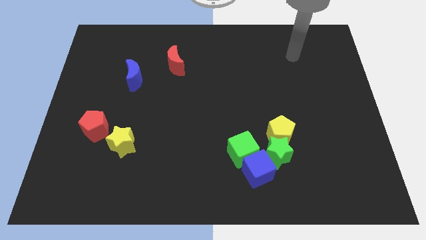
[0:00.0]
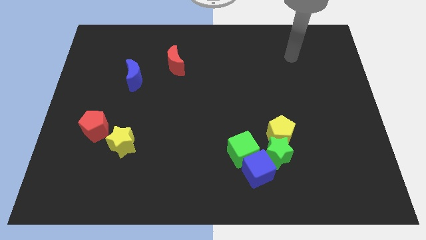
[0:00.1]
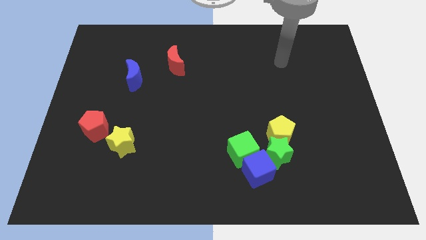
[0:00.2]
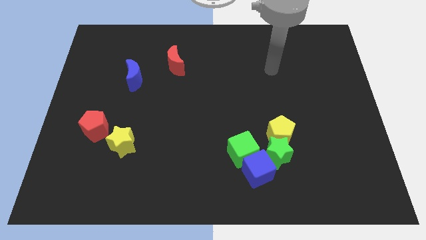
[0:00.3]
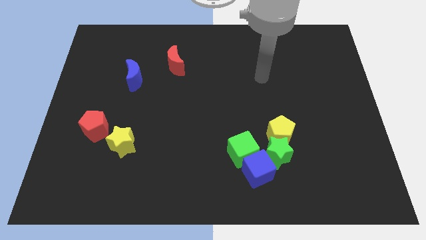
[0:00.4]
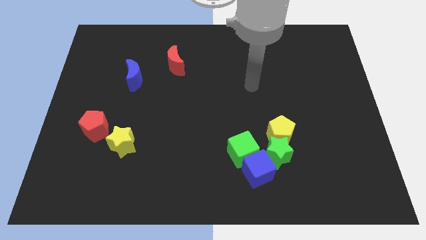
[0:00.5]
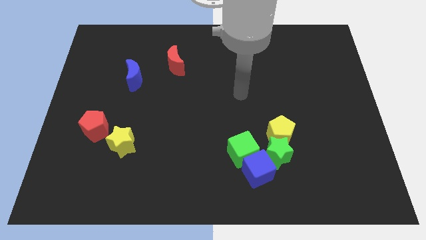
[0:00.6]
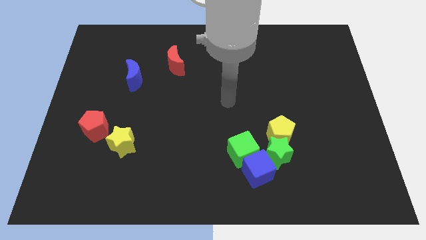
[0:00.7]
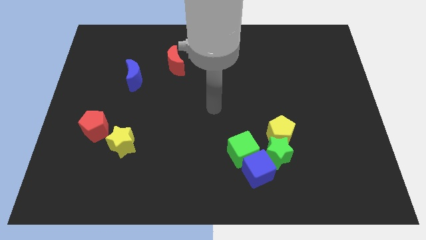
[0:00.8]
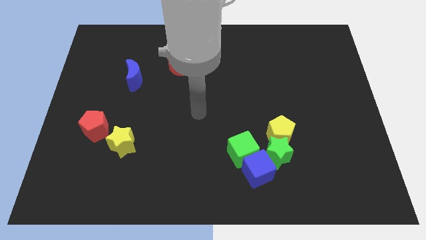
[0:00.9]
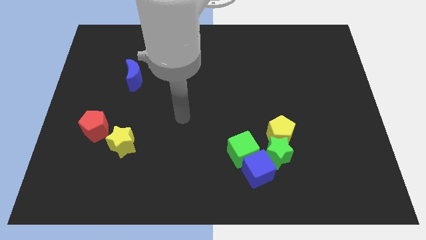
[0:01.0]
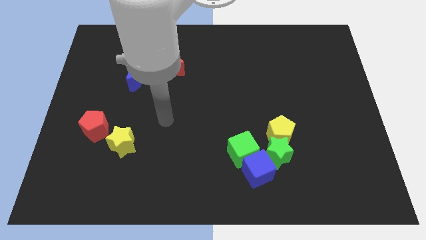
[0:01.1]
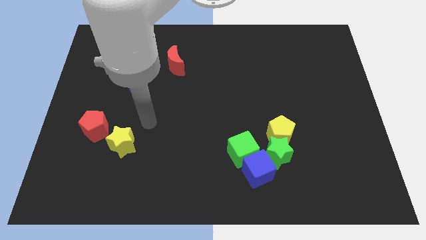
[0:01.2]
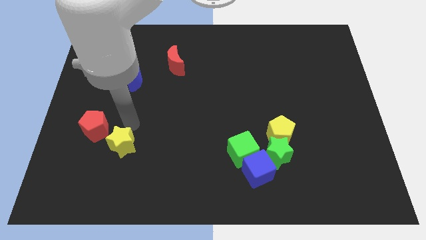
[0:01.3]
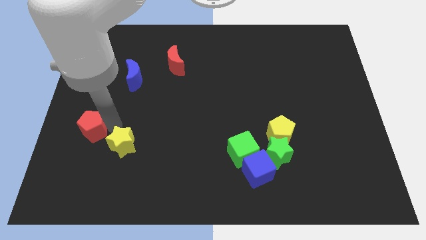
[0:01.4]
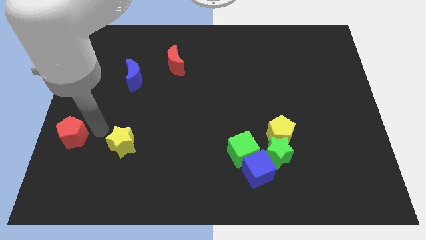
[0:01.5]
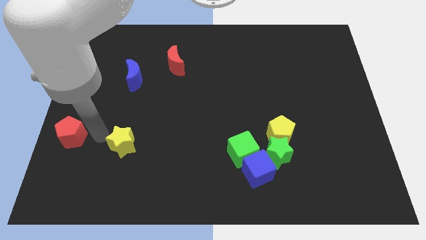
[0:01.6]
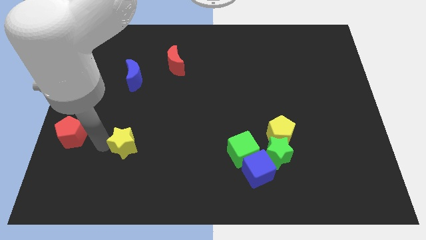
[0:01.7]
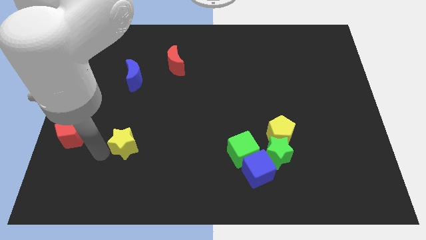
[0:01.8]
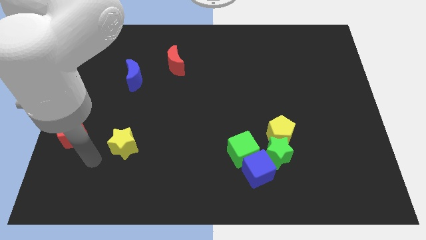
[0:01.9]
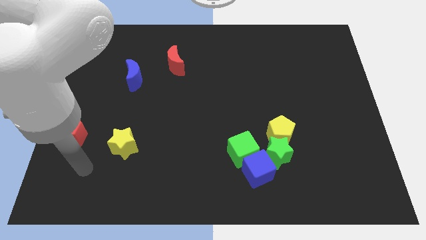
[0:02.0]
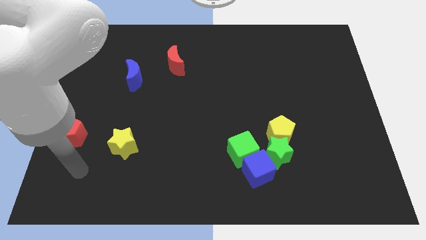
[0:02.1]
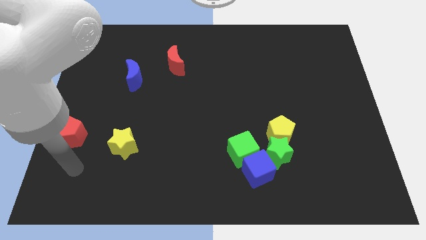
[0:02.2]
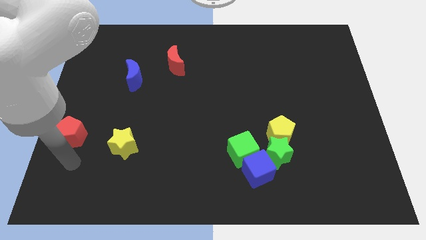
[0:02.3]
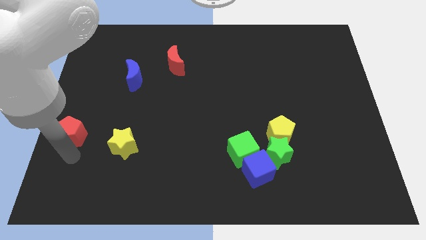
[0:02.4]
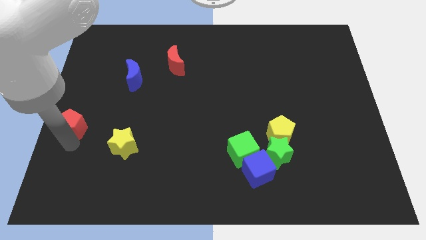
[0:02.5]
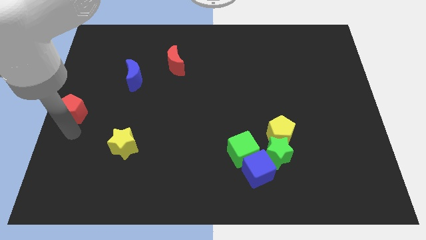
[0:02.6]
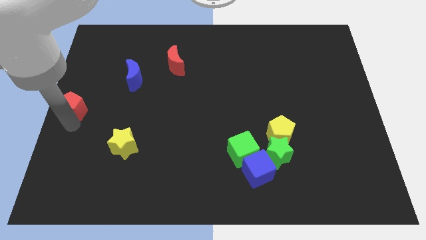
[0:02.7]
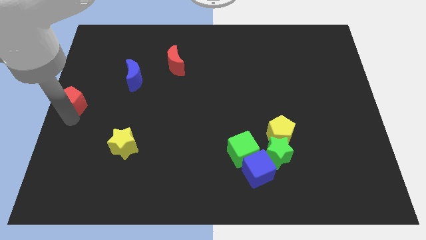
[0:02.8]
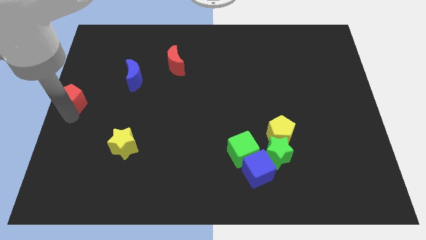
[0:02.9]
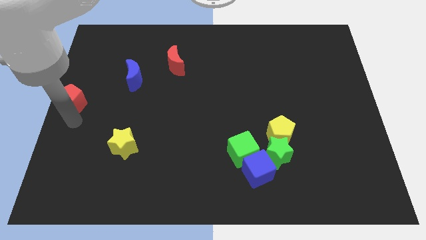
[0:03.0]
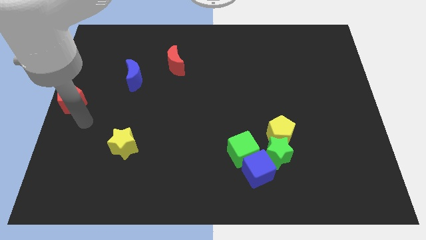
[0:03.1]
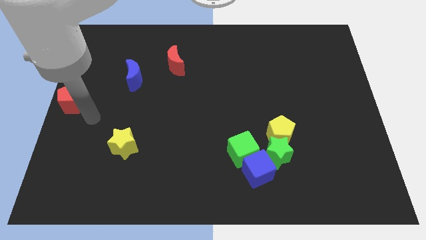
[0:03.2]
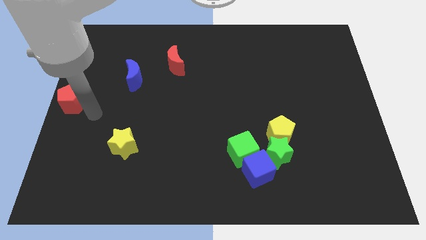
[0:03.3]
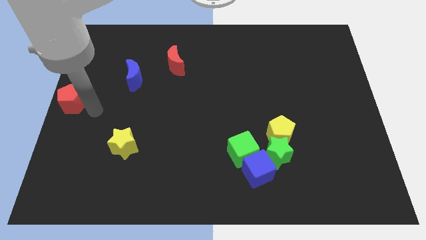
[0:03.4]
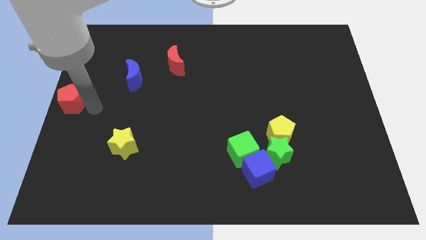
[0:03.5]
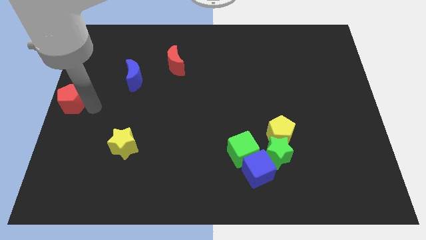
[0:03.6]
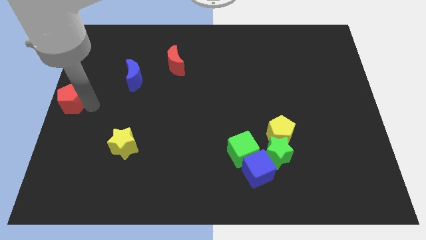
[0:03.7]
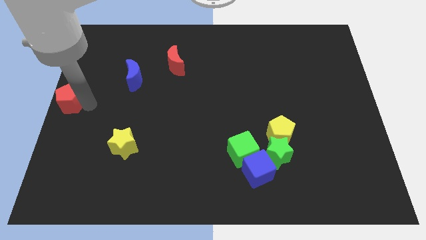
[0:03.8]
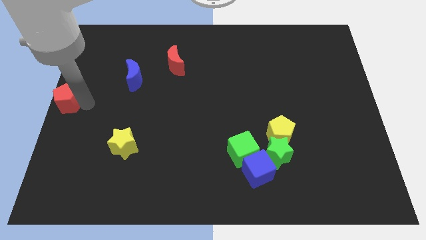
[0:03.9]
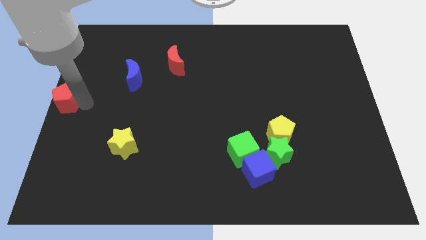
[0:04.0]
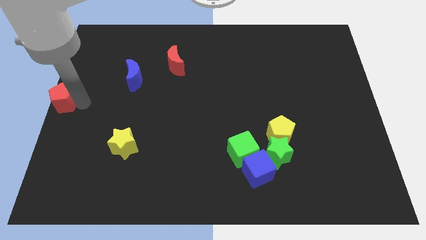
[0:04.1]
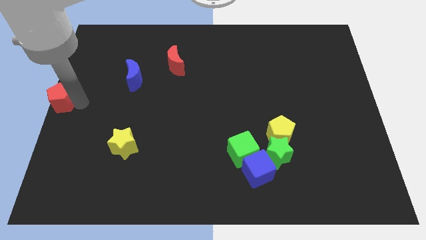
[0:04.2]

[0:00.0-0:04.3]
place the red pentagon to the center left of the table

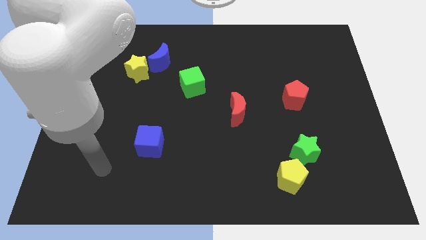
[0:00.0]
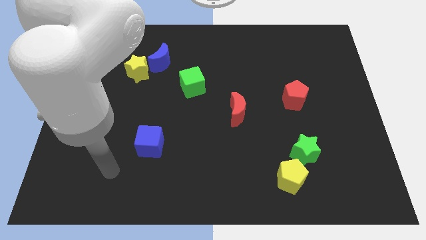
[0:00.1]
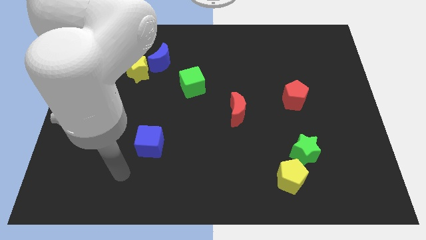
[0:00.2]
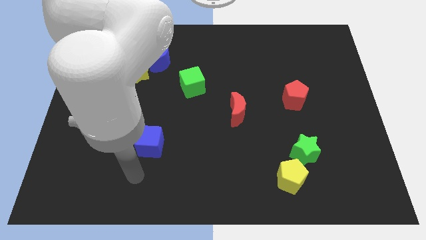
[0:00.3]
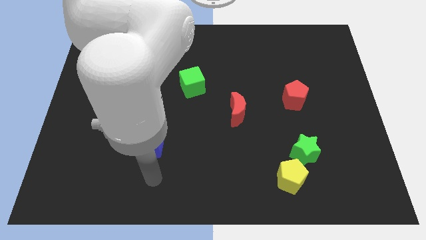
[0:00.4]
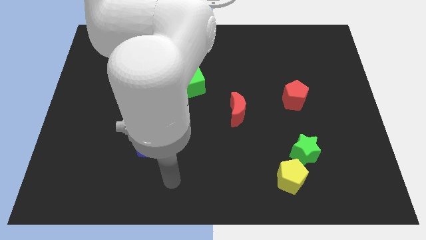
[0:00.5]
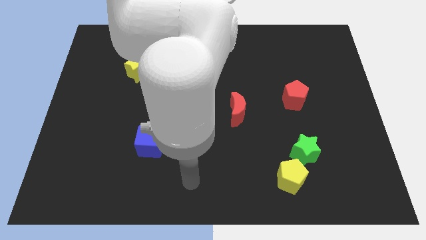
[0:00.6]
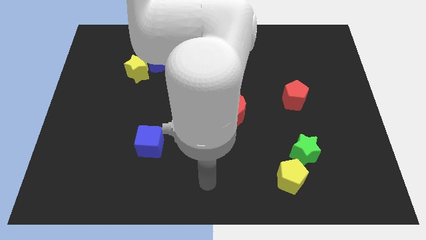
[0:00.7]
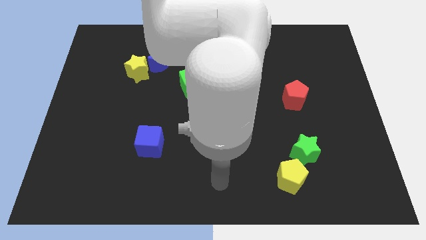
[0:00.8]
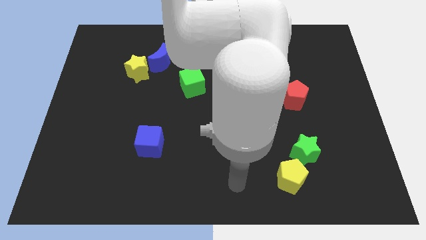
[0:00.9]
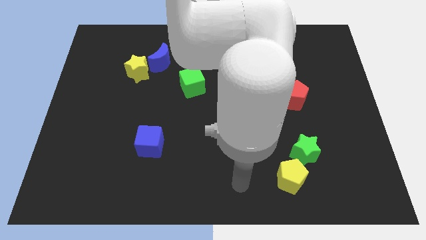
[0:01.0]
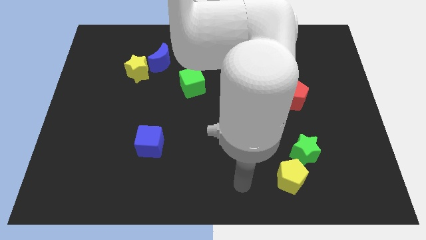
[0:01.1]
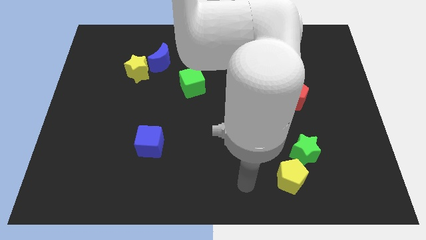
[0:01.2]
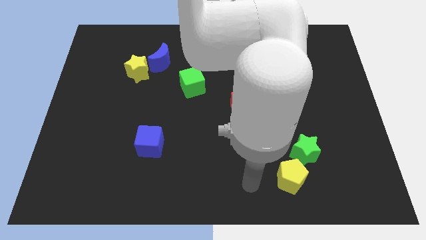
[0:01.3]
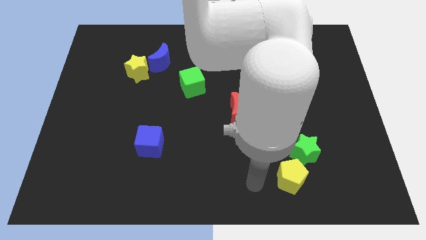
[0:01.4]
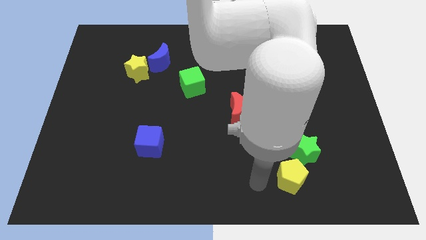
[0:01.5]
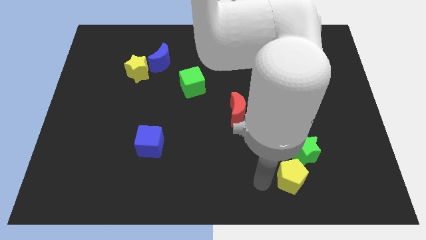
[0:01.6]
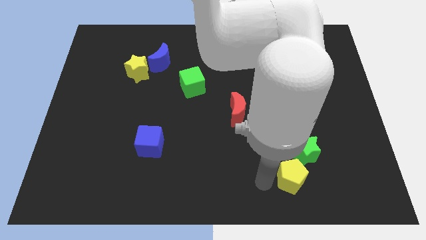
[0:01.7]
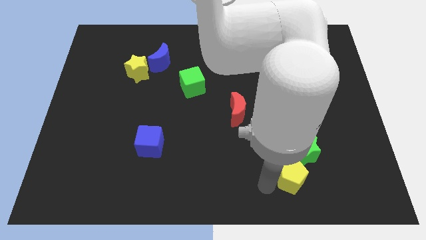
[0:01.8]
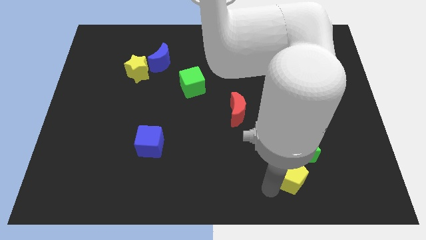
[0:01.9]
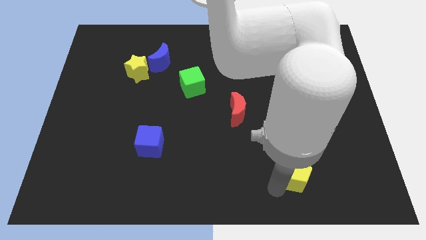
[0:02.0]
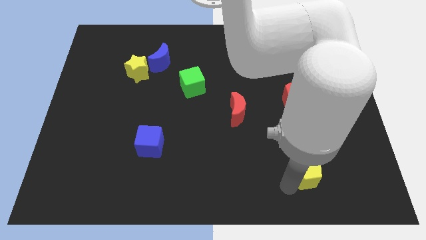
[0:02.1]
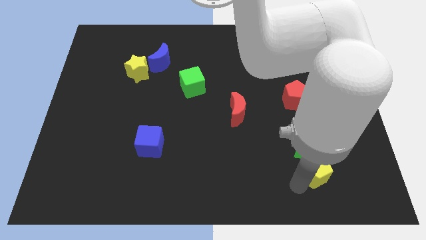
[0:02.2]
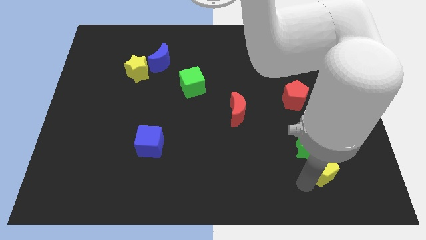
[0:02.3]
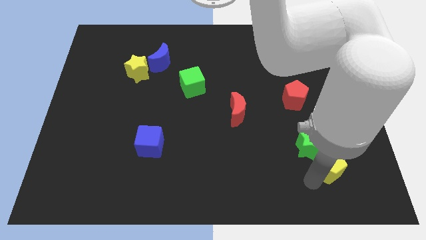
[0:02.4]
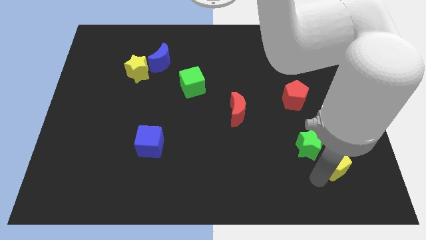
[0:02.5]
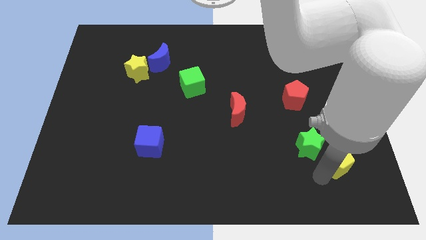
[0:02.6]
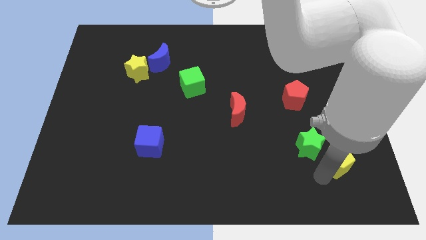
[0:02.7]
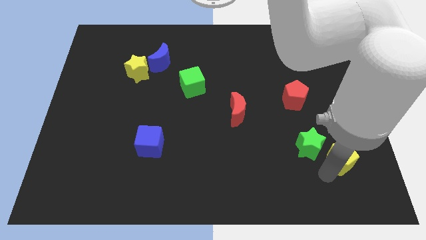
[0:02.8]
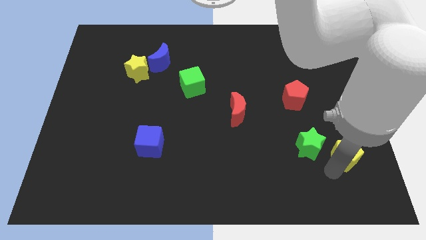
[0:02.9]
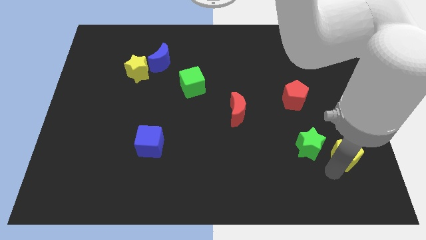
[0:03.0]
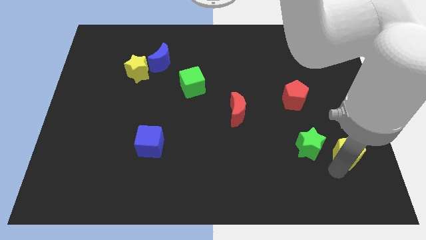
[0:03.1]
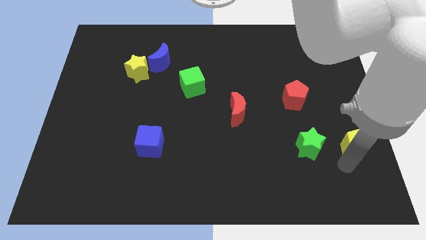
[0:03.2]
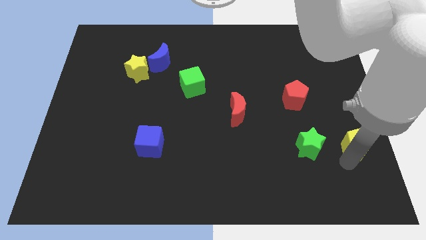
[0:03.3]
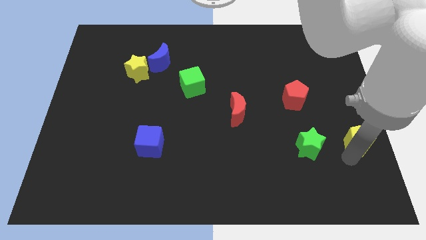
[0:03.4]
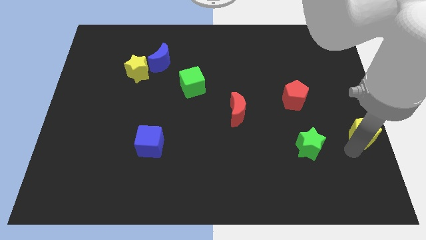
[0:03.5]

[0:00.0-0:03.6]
place yellow pentagon parallel to green star

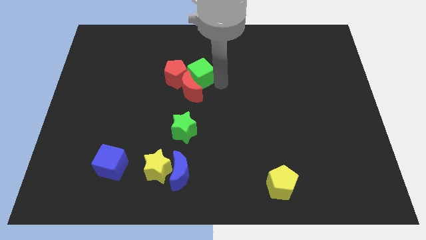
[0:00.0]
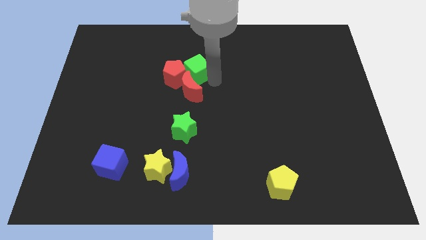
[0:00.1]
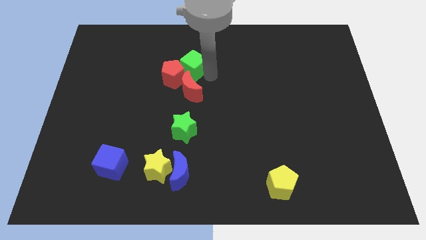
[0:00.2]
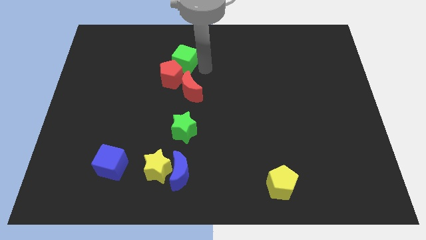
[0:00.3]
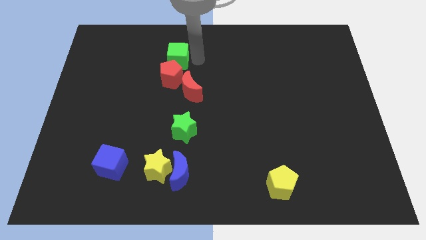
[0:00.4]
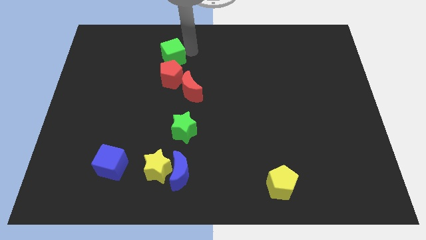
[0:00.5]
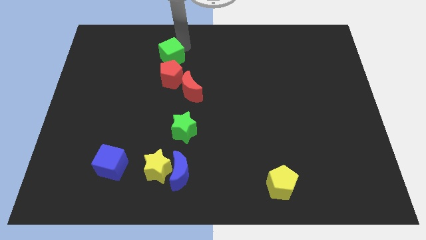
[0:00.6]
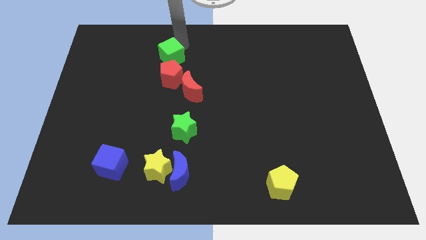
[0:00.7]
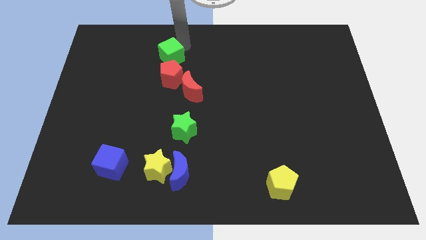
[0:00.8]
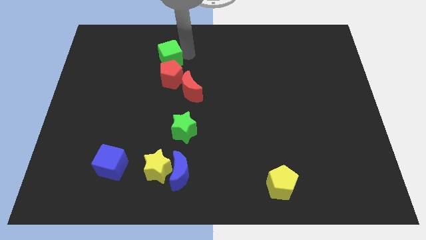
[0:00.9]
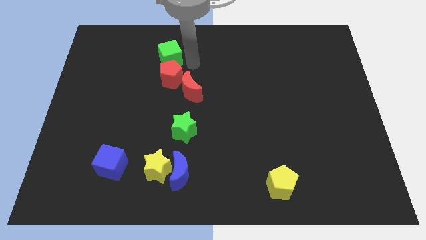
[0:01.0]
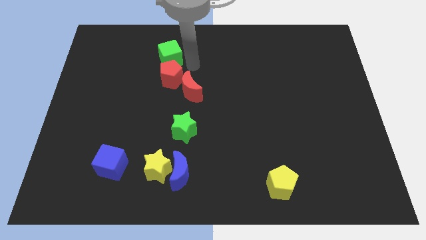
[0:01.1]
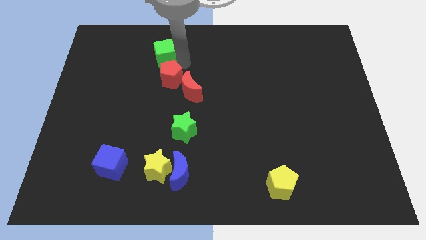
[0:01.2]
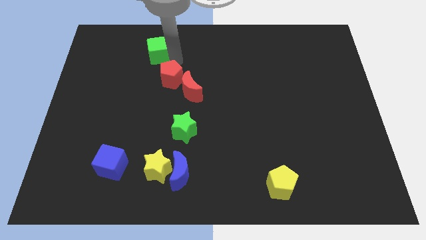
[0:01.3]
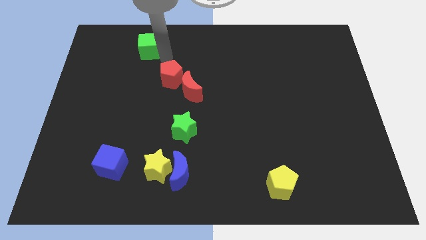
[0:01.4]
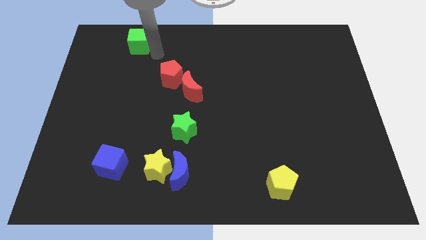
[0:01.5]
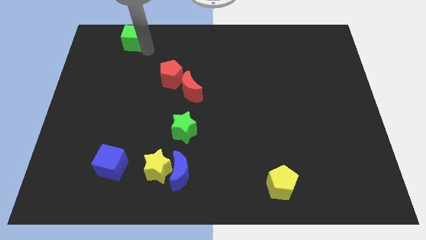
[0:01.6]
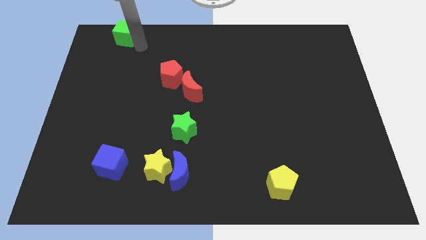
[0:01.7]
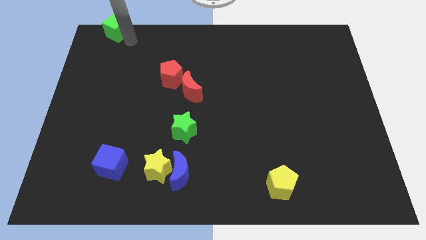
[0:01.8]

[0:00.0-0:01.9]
place the green cube to the top left corner
